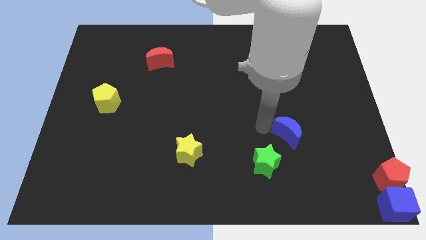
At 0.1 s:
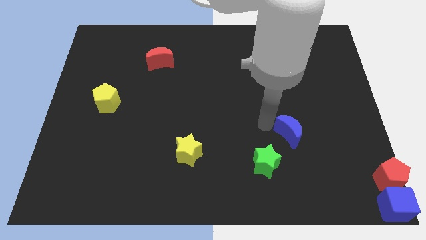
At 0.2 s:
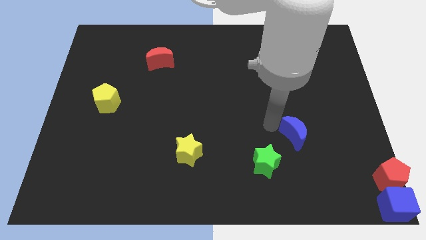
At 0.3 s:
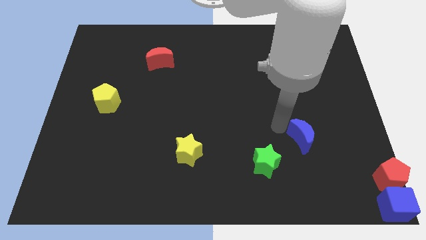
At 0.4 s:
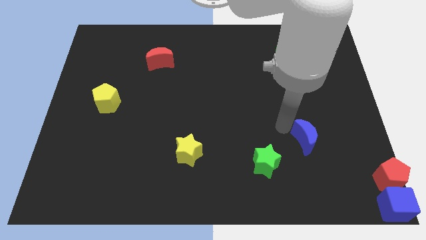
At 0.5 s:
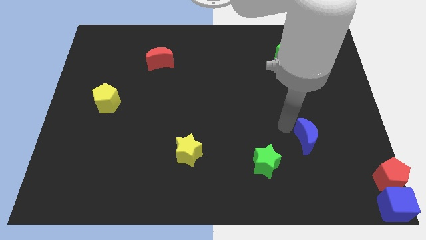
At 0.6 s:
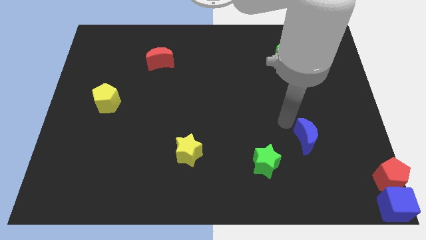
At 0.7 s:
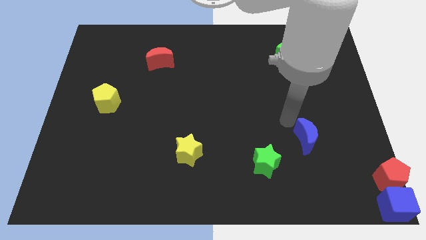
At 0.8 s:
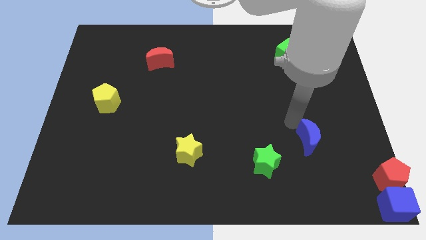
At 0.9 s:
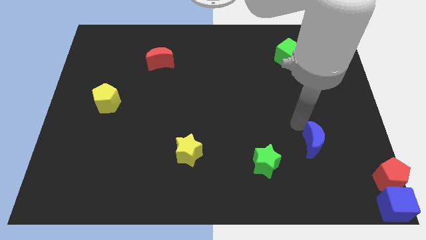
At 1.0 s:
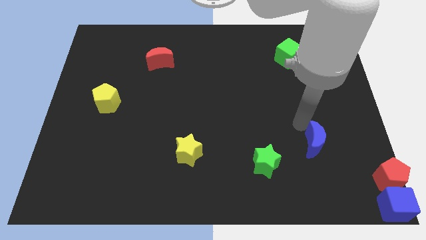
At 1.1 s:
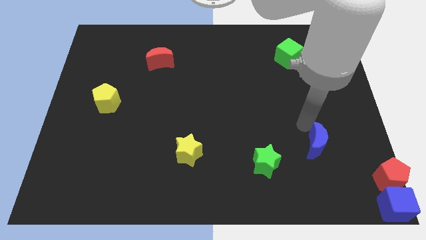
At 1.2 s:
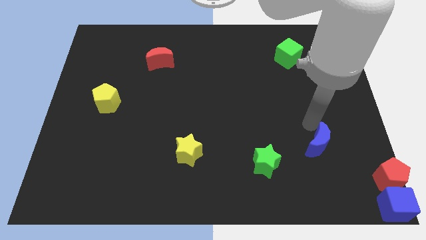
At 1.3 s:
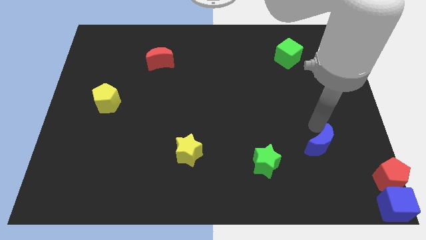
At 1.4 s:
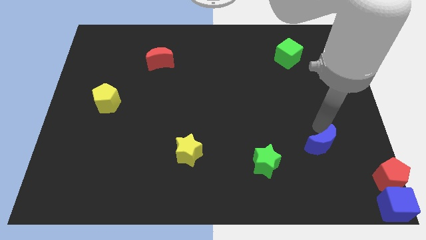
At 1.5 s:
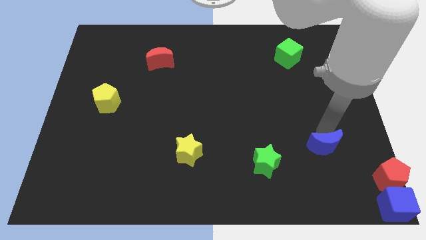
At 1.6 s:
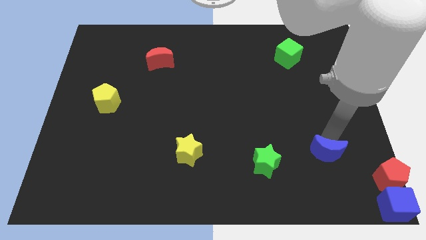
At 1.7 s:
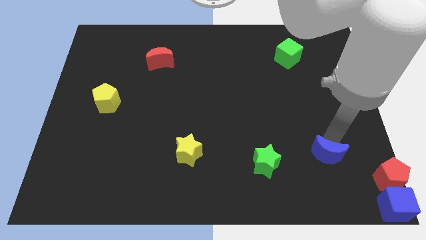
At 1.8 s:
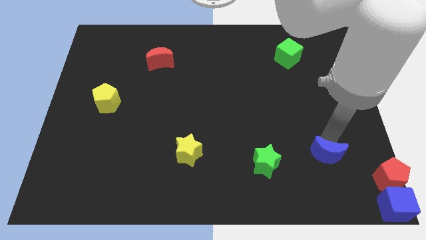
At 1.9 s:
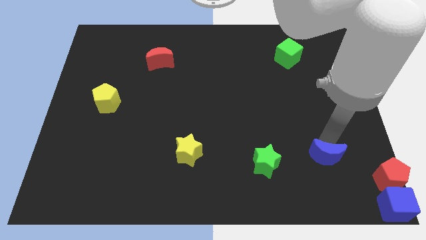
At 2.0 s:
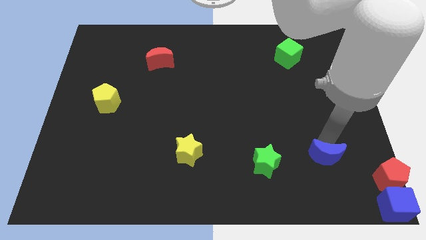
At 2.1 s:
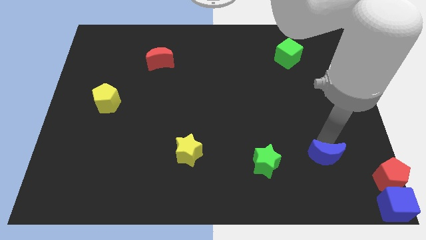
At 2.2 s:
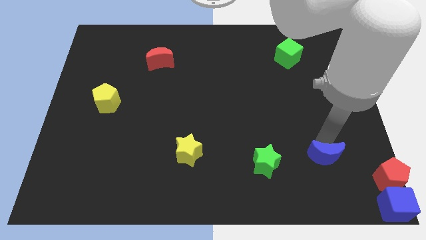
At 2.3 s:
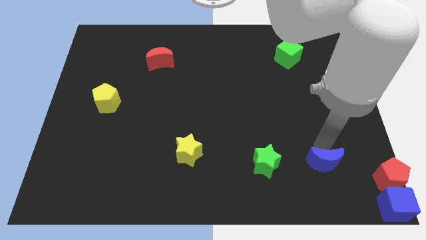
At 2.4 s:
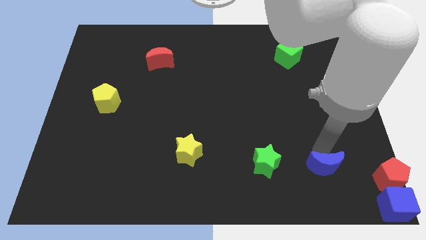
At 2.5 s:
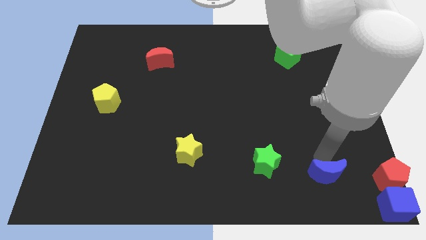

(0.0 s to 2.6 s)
place the blue crescent in between green star and red pentagon

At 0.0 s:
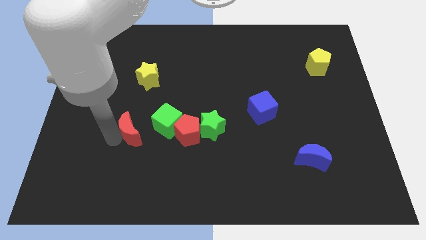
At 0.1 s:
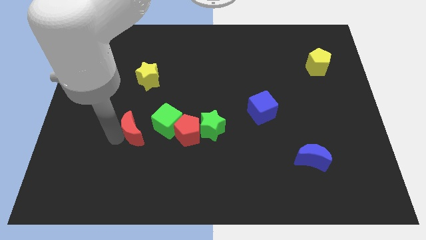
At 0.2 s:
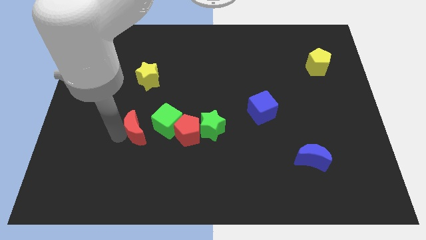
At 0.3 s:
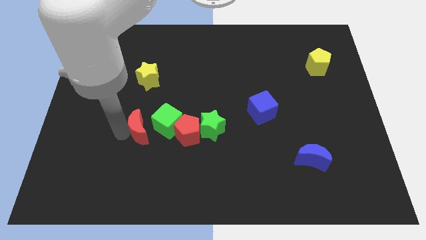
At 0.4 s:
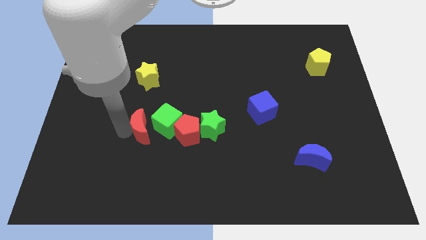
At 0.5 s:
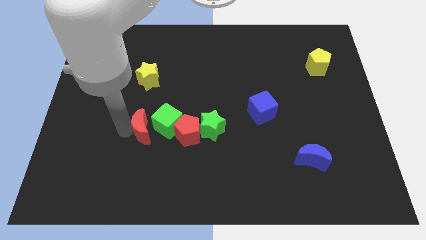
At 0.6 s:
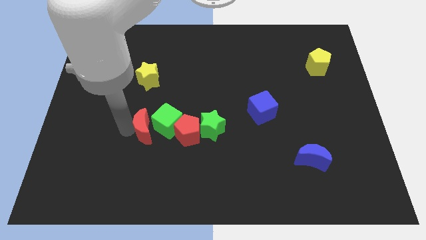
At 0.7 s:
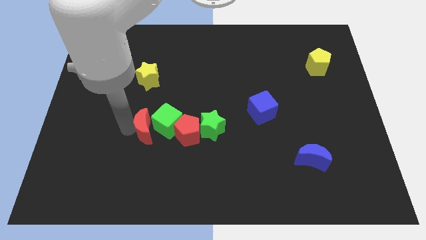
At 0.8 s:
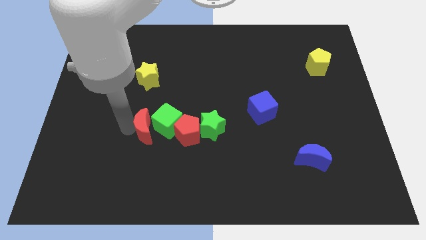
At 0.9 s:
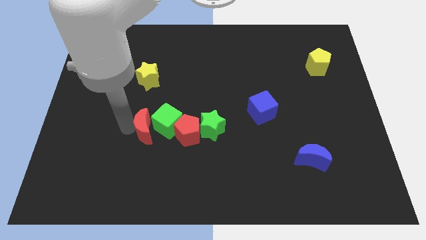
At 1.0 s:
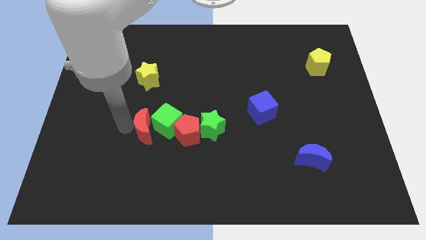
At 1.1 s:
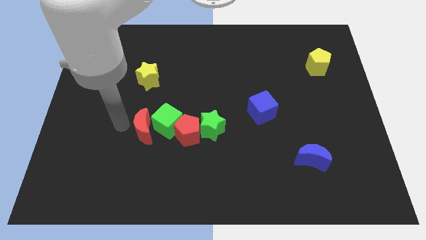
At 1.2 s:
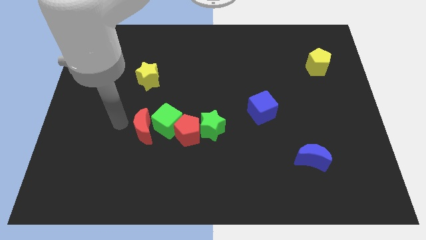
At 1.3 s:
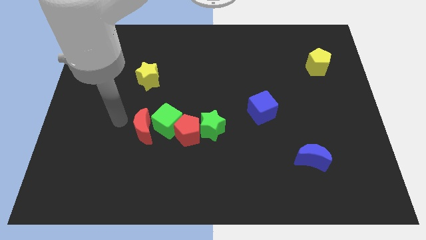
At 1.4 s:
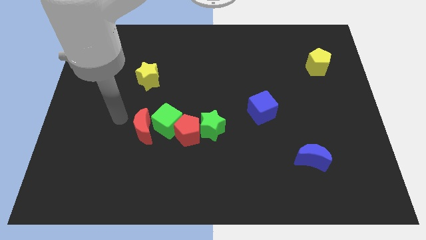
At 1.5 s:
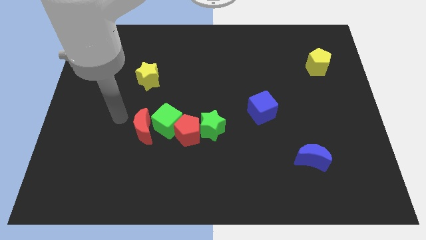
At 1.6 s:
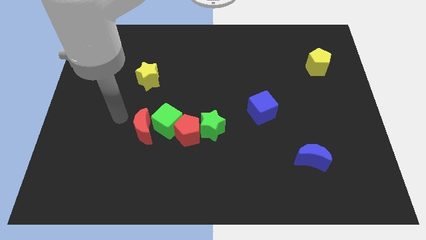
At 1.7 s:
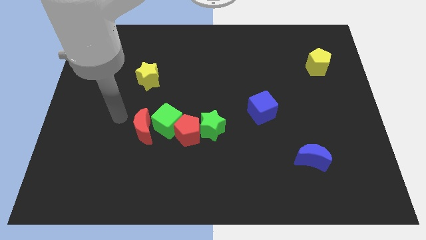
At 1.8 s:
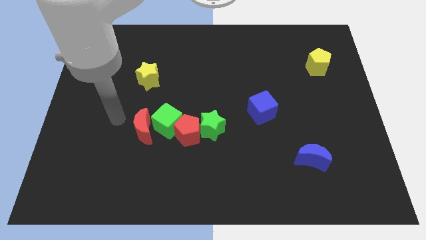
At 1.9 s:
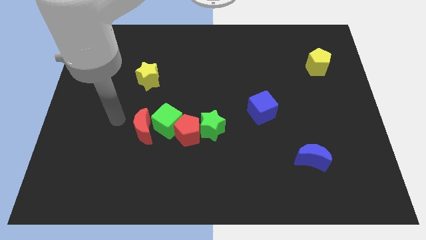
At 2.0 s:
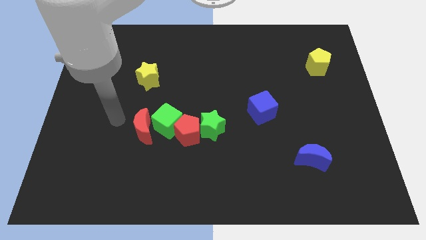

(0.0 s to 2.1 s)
place the red crescent to the left of green cube

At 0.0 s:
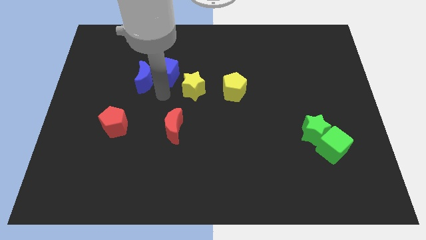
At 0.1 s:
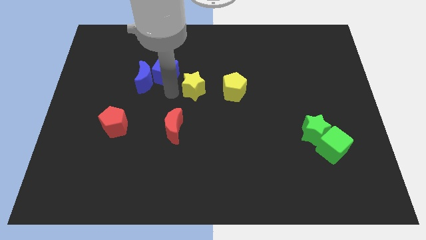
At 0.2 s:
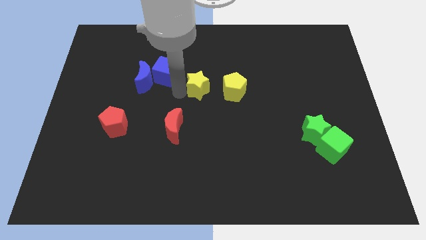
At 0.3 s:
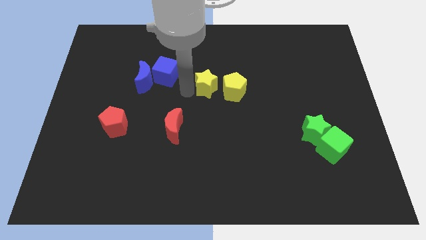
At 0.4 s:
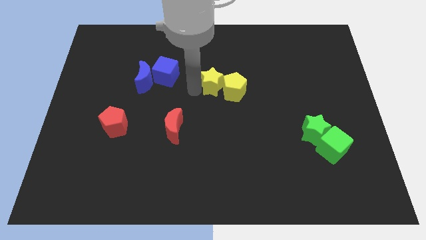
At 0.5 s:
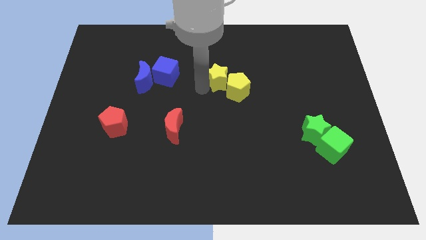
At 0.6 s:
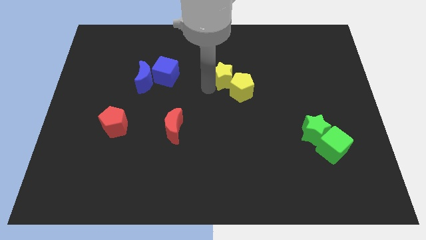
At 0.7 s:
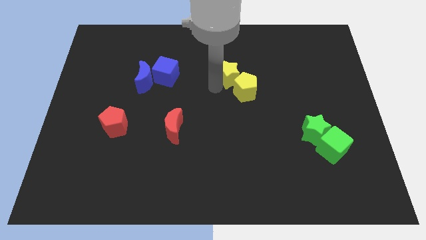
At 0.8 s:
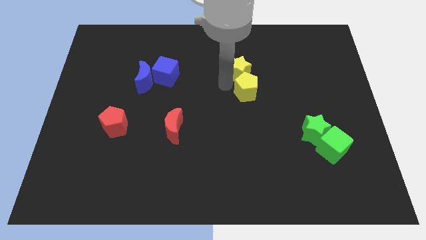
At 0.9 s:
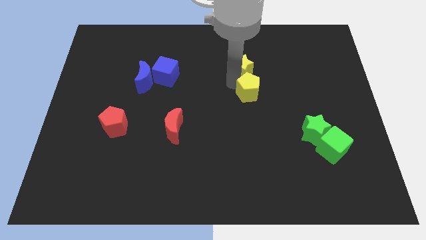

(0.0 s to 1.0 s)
move the yellow star at the top of the yellow pentagon

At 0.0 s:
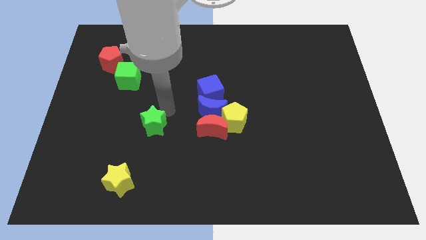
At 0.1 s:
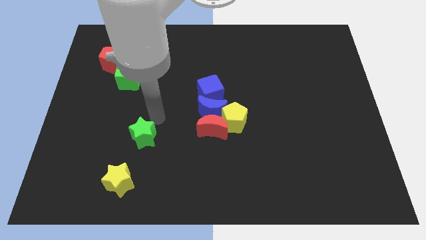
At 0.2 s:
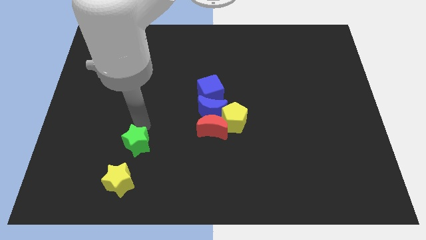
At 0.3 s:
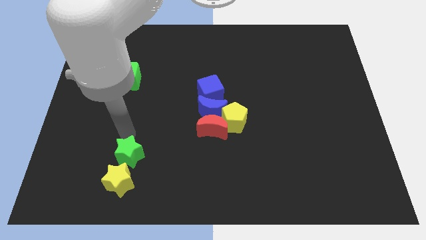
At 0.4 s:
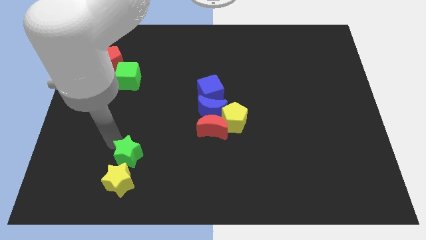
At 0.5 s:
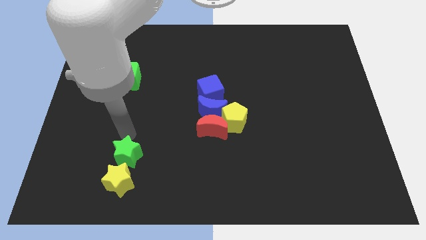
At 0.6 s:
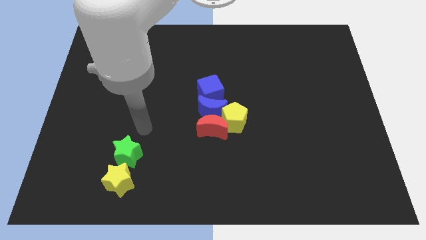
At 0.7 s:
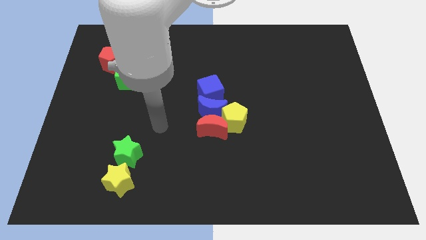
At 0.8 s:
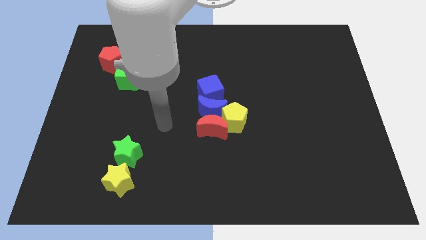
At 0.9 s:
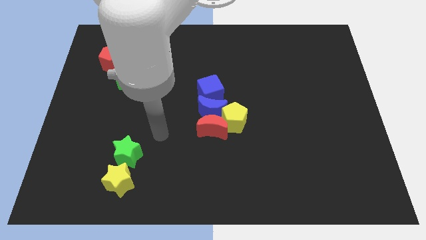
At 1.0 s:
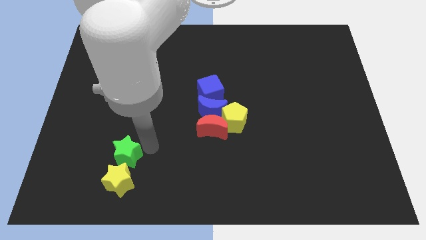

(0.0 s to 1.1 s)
place the green star above the yellow star

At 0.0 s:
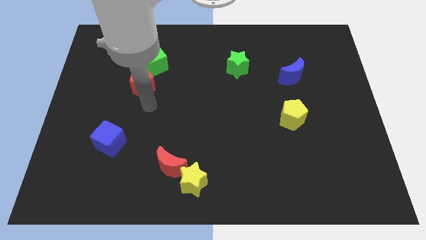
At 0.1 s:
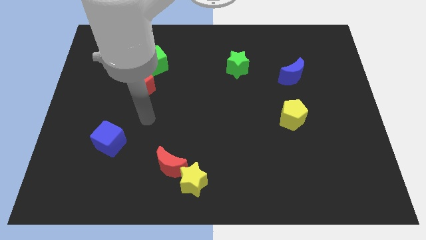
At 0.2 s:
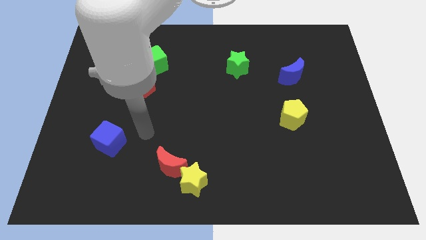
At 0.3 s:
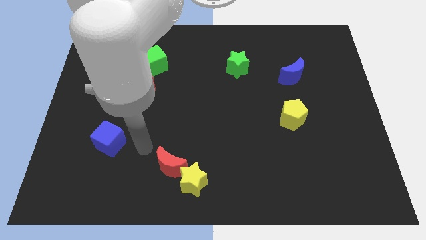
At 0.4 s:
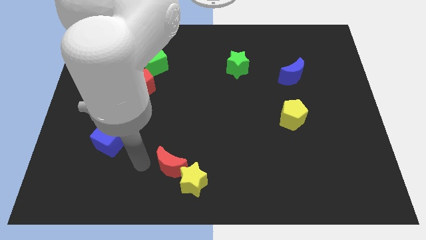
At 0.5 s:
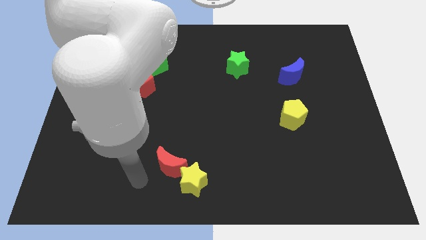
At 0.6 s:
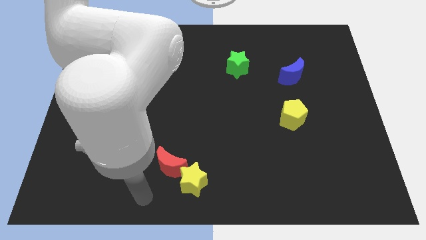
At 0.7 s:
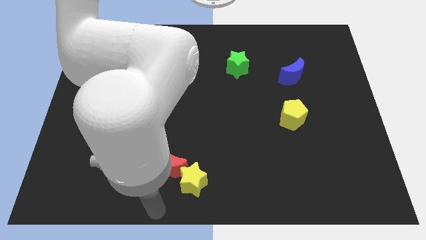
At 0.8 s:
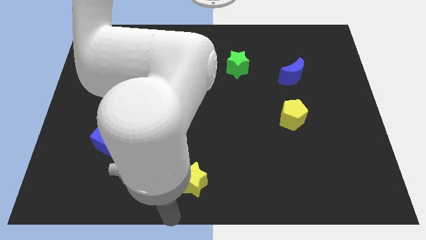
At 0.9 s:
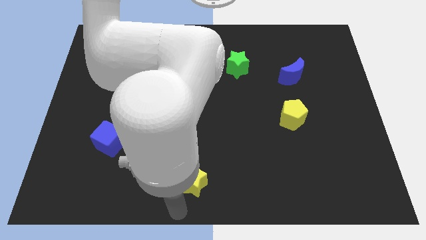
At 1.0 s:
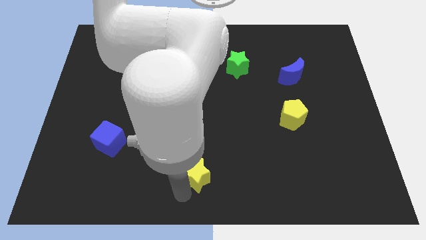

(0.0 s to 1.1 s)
touch the bottom of yellow star

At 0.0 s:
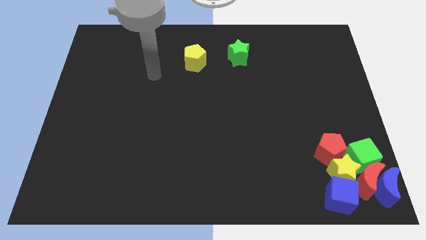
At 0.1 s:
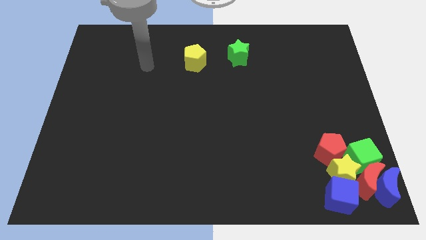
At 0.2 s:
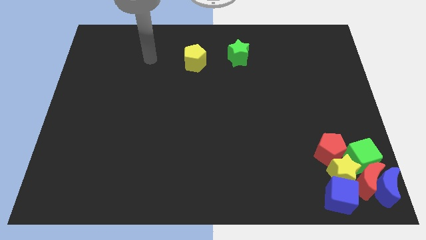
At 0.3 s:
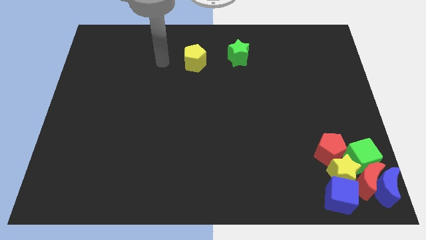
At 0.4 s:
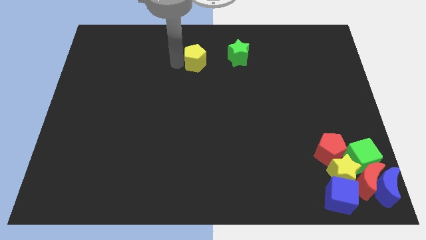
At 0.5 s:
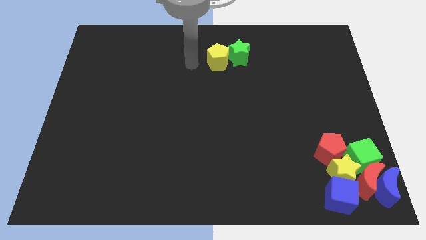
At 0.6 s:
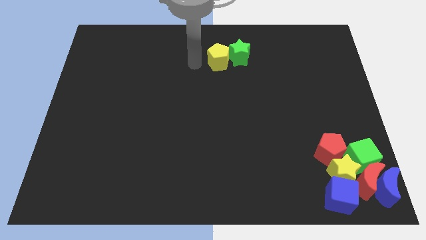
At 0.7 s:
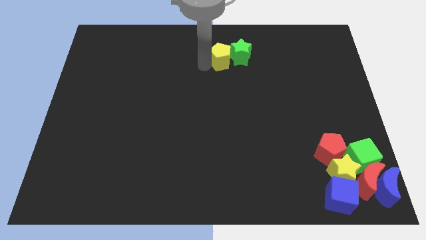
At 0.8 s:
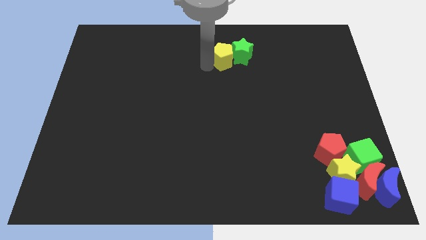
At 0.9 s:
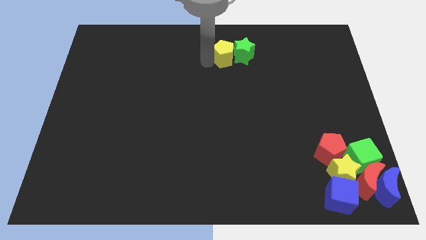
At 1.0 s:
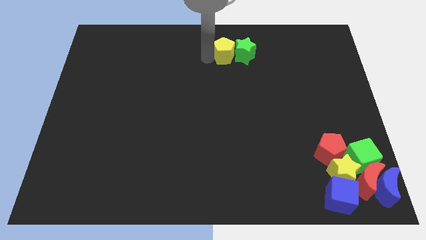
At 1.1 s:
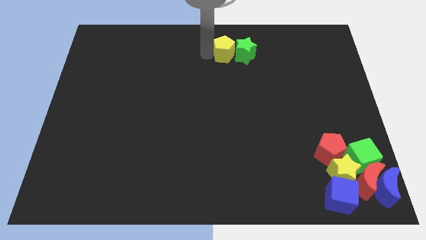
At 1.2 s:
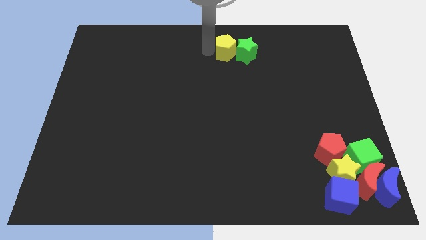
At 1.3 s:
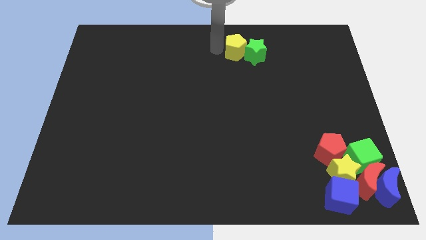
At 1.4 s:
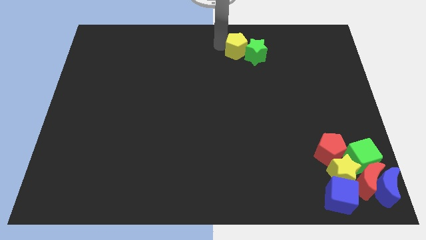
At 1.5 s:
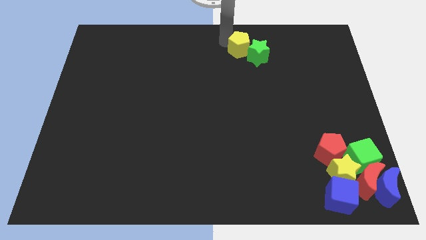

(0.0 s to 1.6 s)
push the yellow pentagon into the green star
